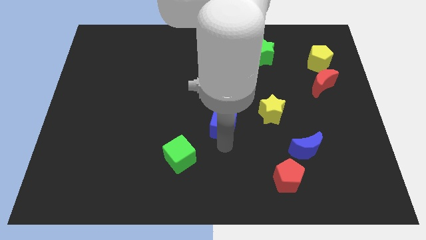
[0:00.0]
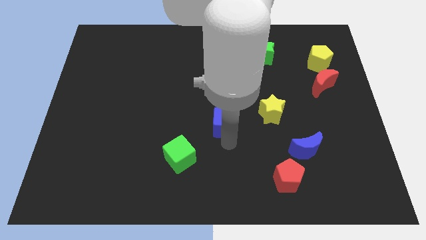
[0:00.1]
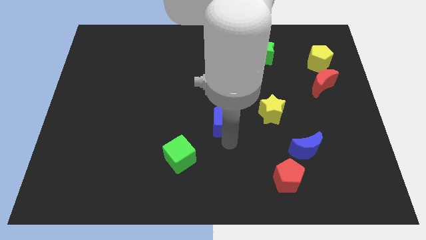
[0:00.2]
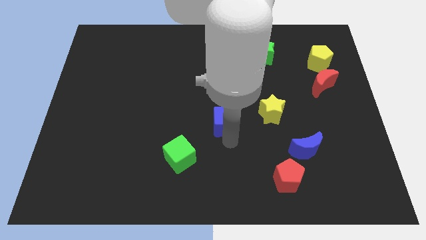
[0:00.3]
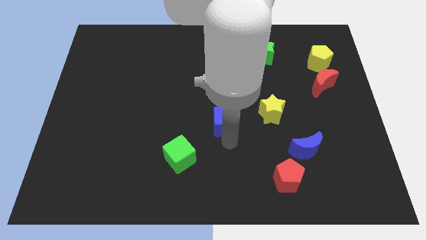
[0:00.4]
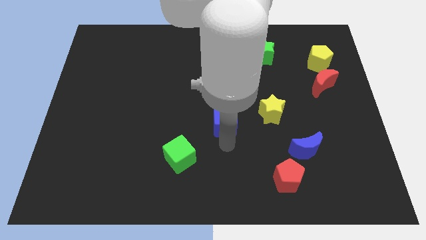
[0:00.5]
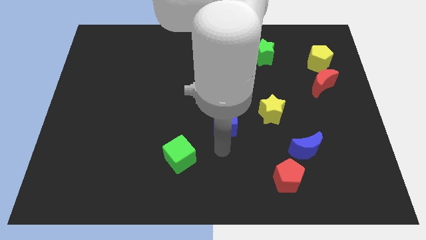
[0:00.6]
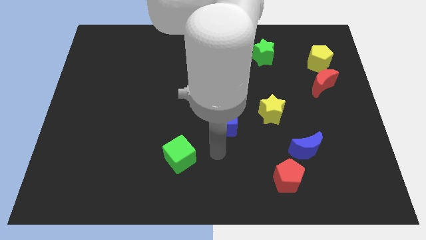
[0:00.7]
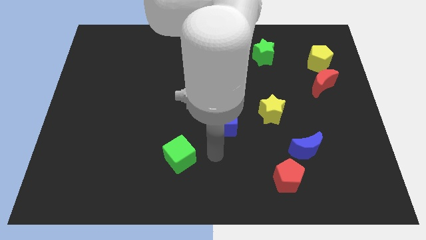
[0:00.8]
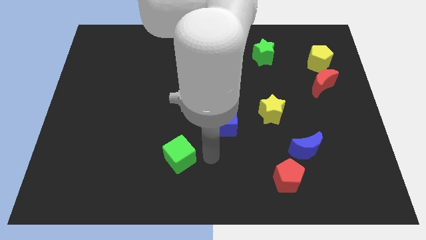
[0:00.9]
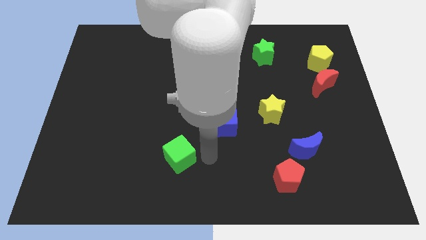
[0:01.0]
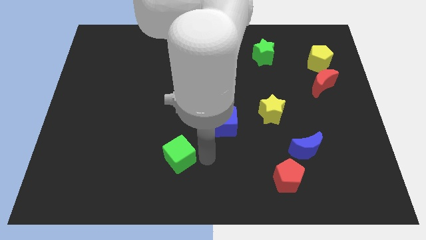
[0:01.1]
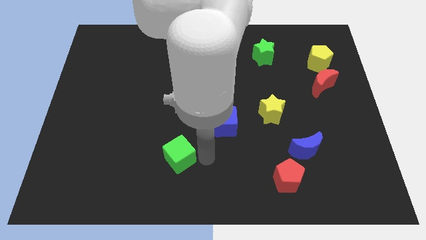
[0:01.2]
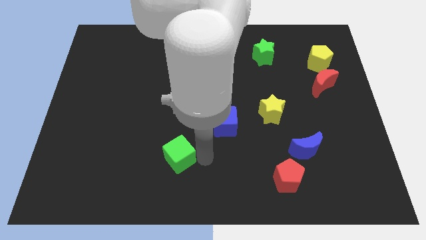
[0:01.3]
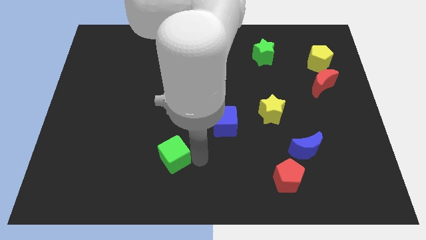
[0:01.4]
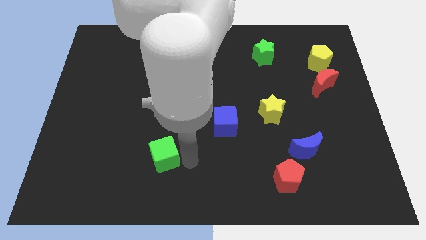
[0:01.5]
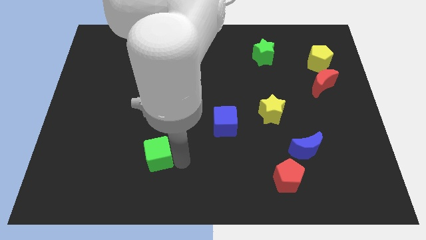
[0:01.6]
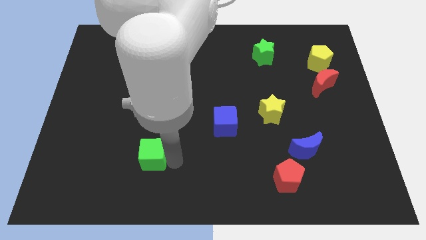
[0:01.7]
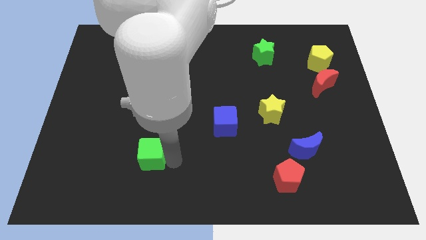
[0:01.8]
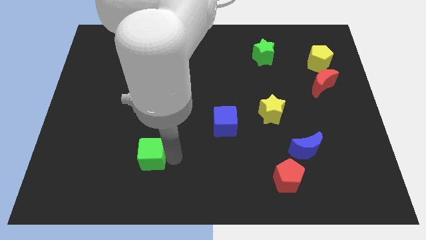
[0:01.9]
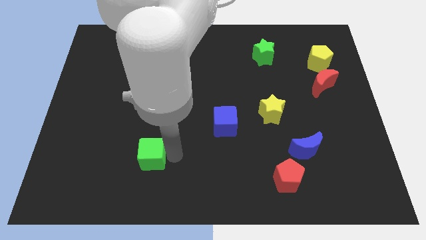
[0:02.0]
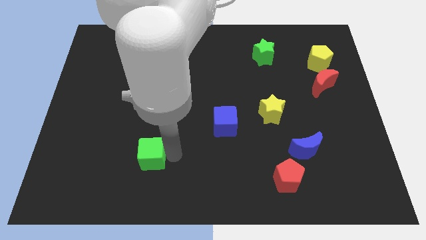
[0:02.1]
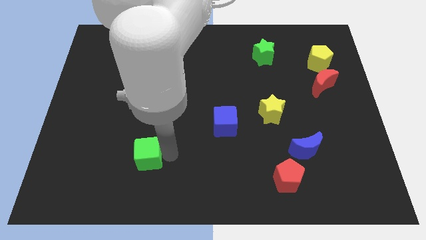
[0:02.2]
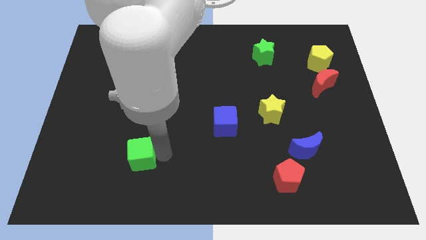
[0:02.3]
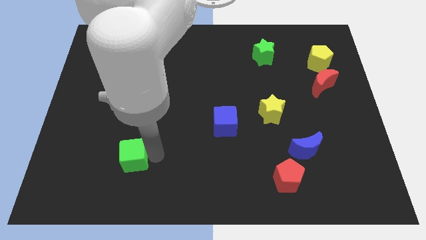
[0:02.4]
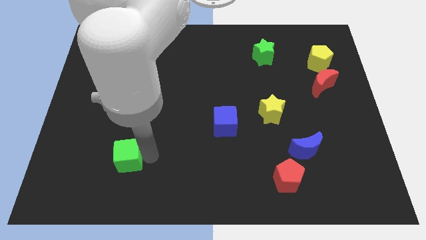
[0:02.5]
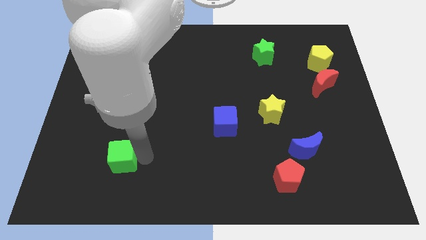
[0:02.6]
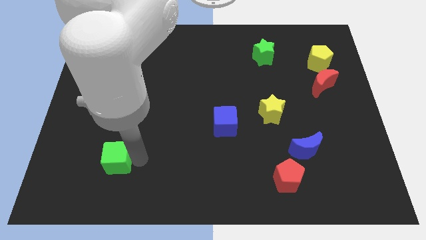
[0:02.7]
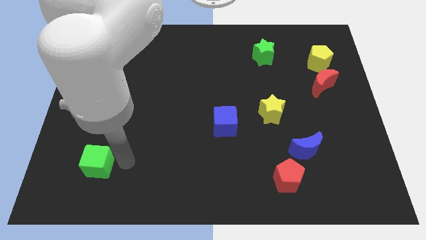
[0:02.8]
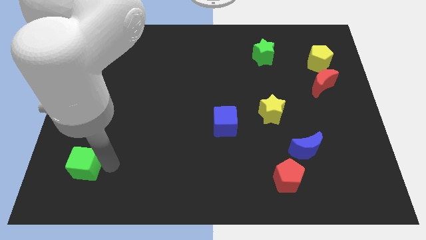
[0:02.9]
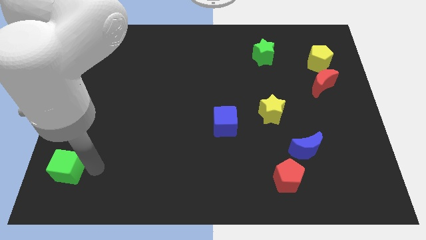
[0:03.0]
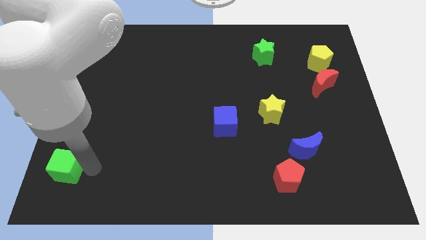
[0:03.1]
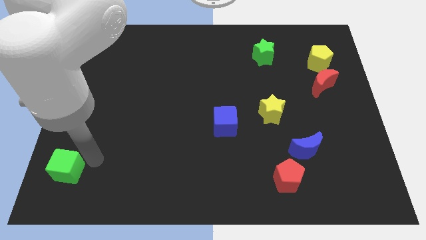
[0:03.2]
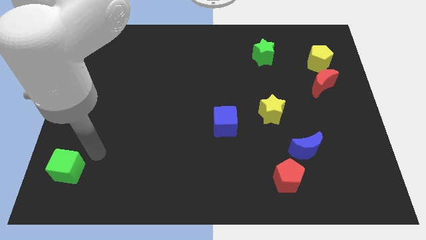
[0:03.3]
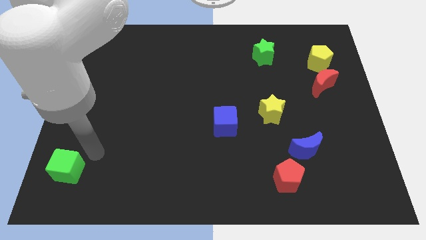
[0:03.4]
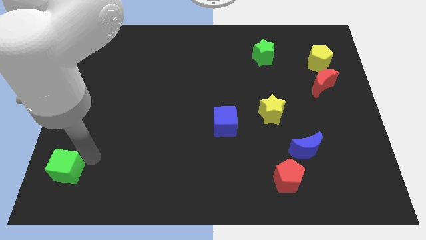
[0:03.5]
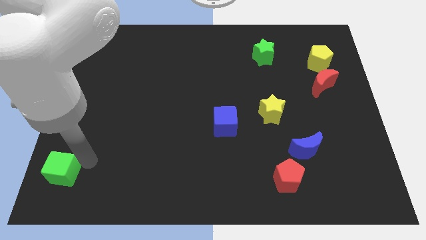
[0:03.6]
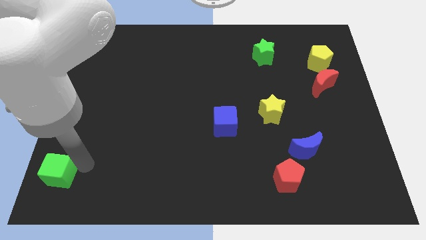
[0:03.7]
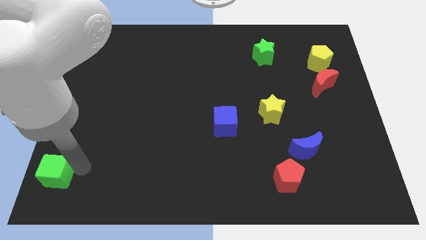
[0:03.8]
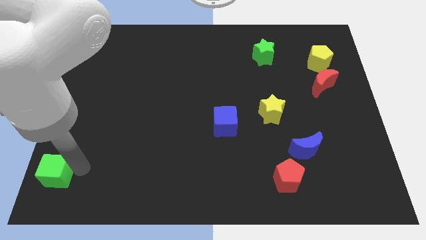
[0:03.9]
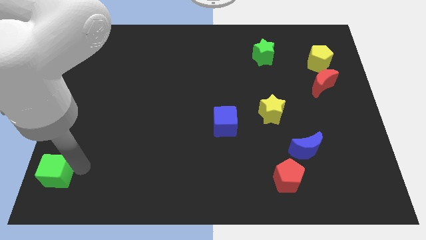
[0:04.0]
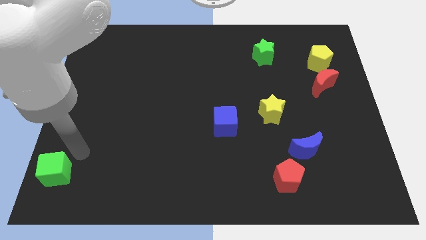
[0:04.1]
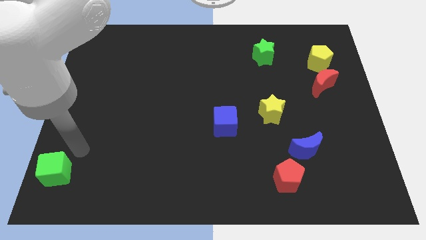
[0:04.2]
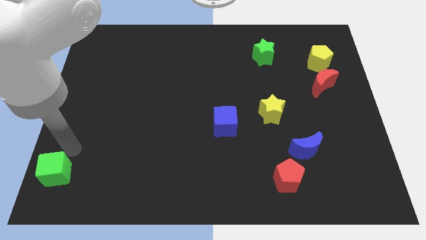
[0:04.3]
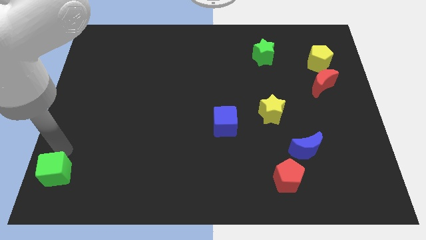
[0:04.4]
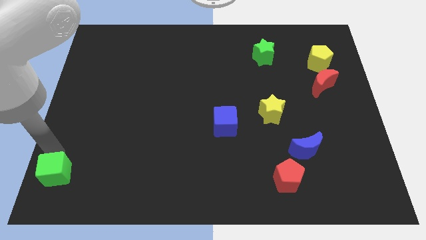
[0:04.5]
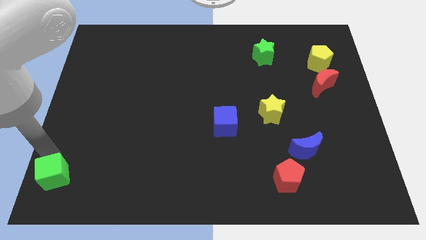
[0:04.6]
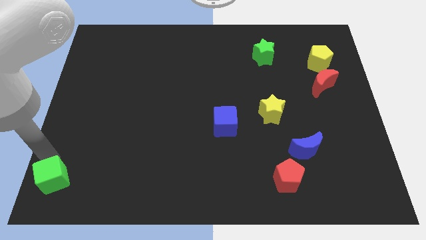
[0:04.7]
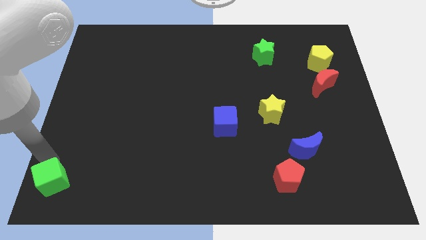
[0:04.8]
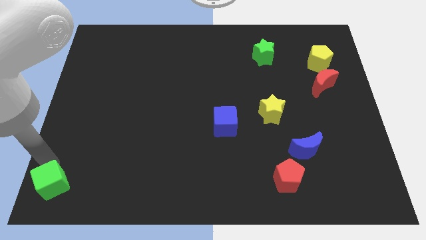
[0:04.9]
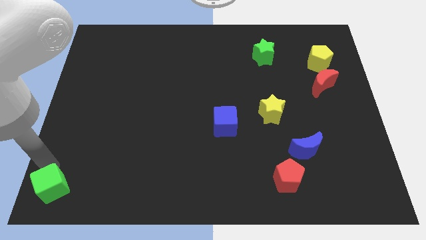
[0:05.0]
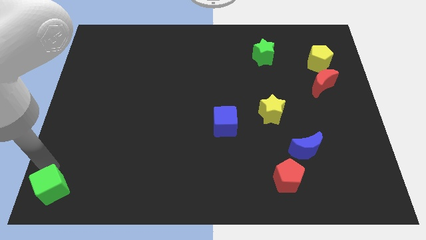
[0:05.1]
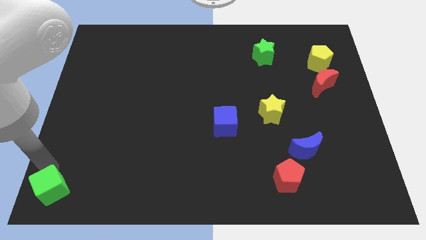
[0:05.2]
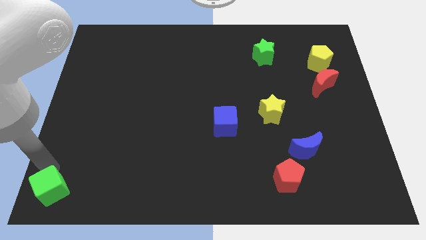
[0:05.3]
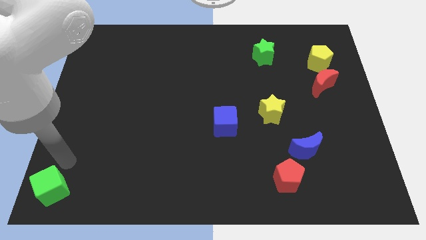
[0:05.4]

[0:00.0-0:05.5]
move the green cube to the bottom left corner of the board

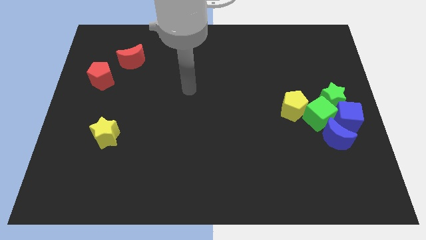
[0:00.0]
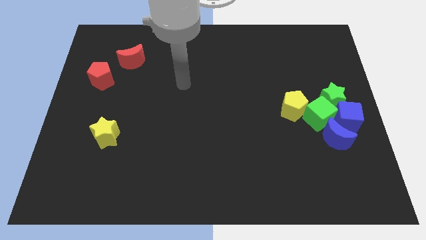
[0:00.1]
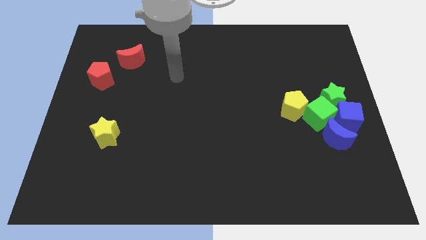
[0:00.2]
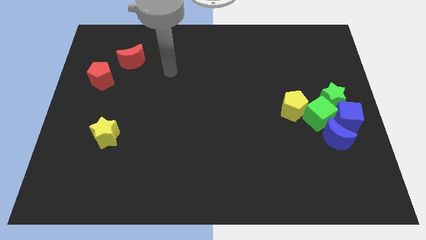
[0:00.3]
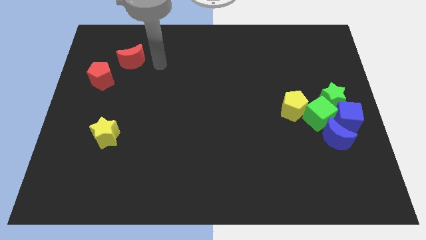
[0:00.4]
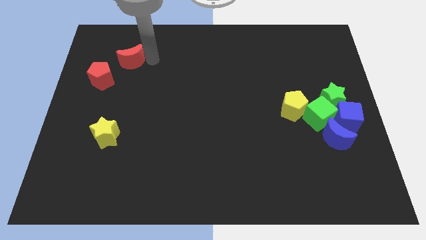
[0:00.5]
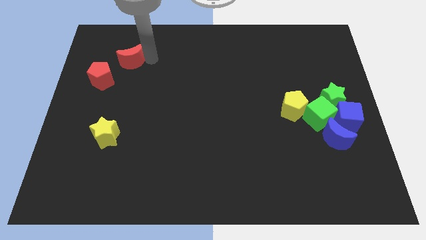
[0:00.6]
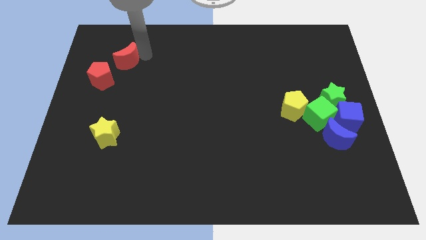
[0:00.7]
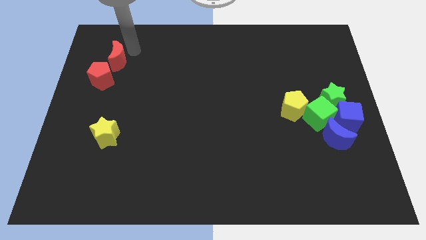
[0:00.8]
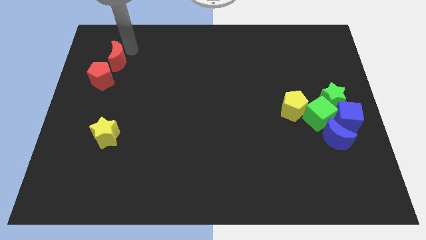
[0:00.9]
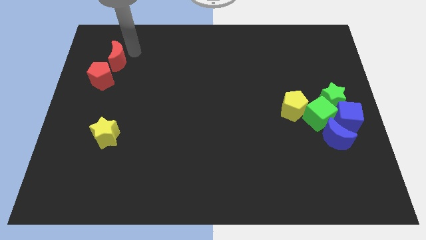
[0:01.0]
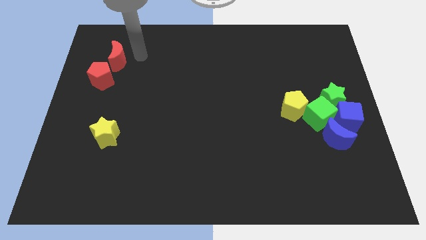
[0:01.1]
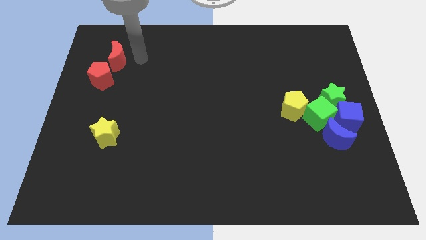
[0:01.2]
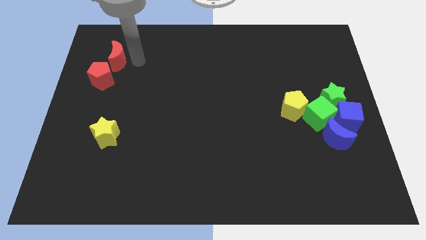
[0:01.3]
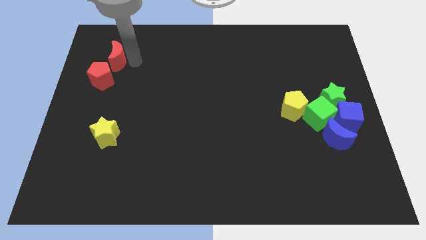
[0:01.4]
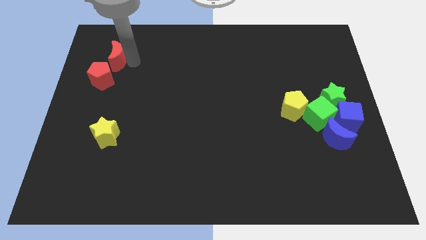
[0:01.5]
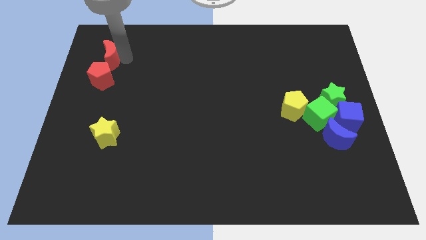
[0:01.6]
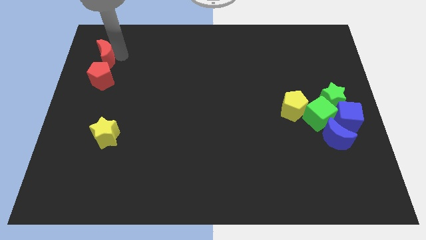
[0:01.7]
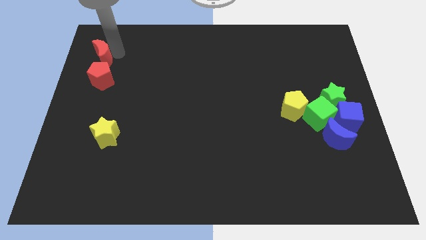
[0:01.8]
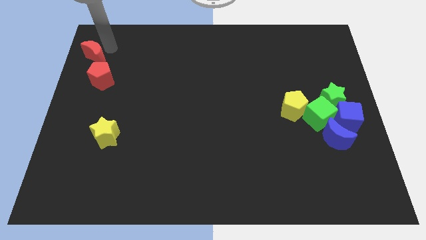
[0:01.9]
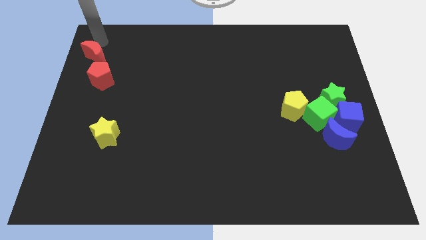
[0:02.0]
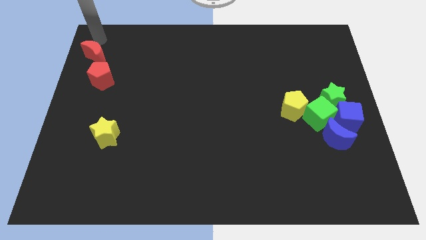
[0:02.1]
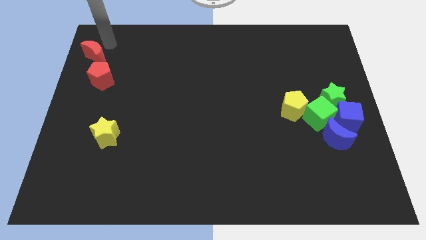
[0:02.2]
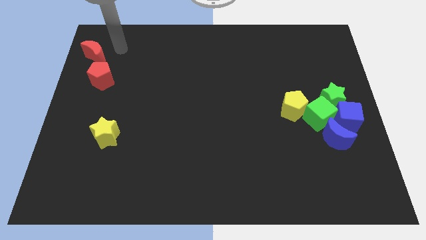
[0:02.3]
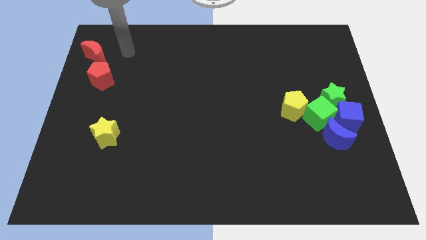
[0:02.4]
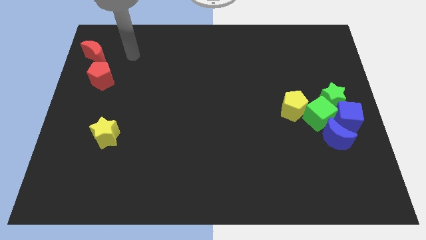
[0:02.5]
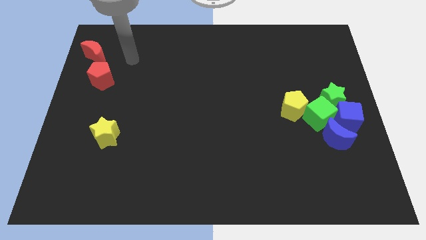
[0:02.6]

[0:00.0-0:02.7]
slide the red moon slightly to the left side of the board

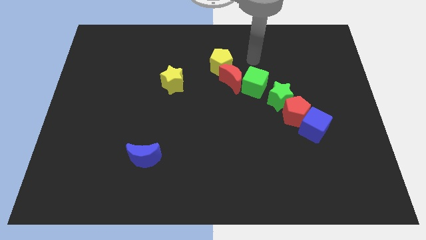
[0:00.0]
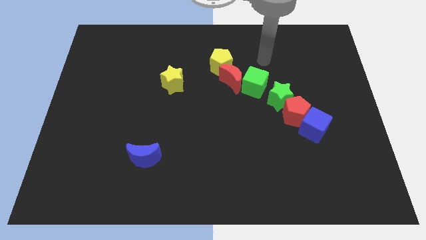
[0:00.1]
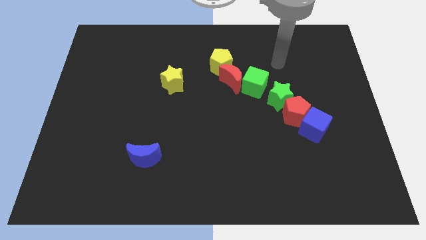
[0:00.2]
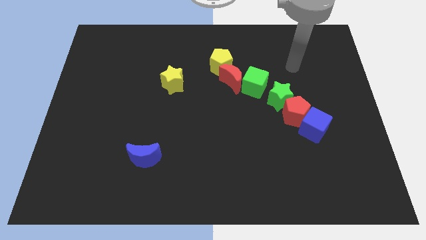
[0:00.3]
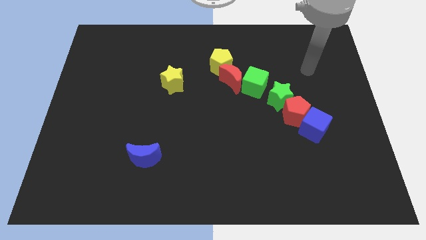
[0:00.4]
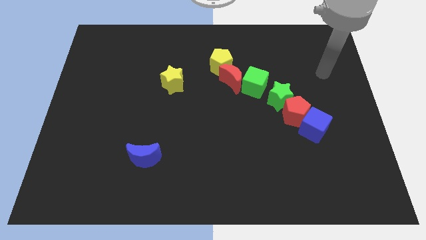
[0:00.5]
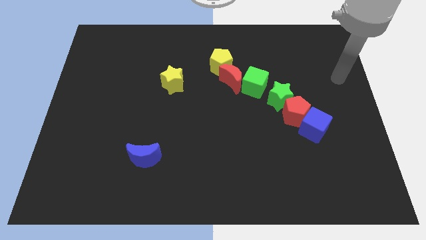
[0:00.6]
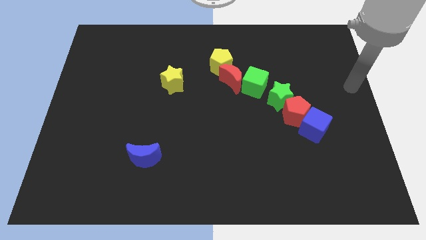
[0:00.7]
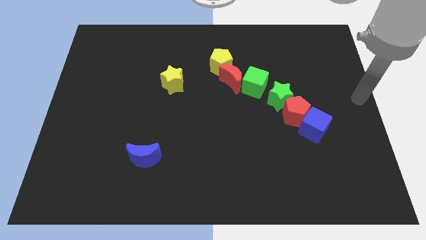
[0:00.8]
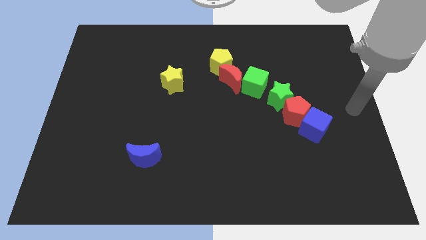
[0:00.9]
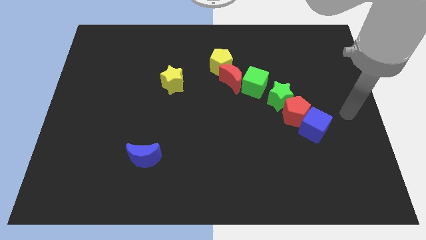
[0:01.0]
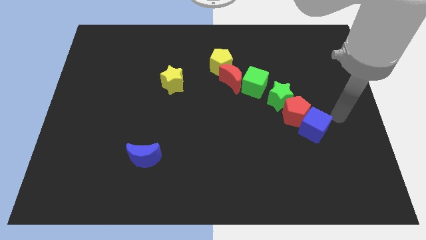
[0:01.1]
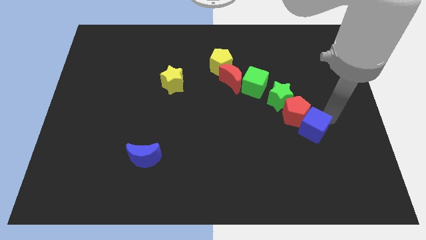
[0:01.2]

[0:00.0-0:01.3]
point your hand at the top right of the blue cube
